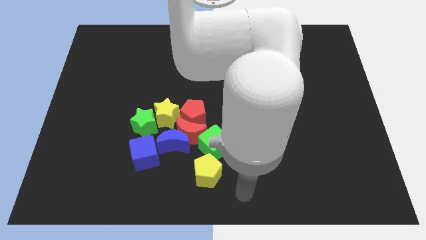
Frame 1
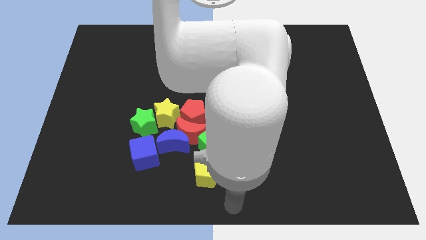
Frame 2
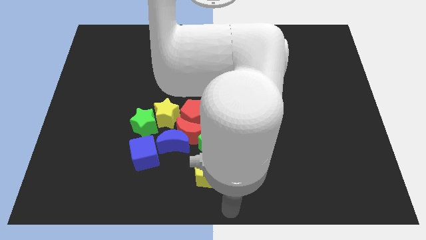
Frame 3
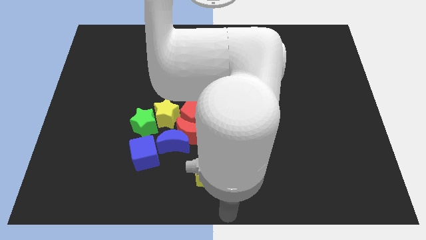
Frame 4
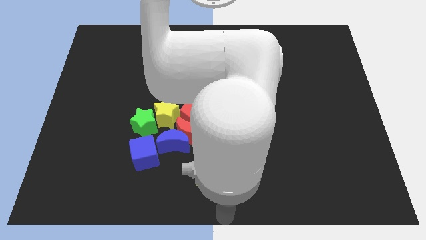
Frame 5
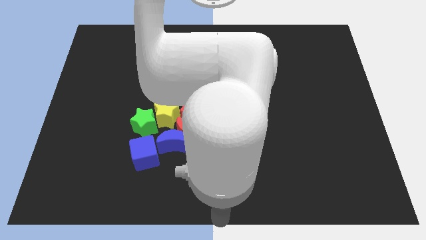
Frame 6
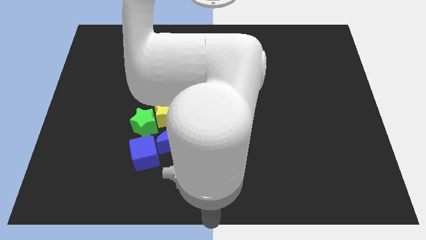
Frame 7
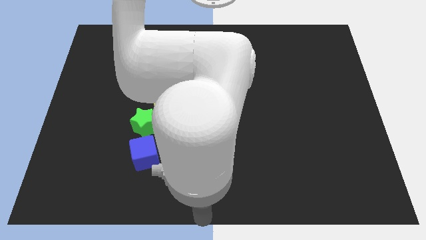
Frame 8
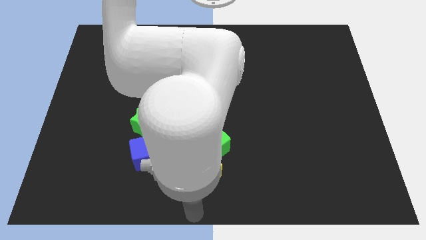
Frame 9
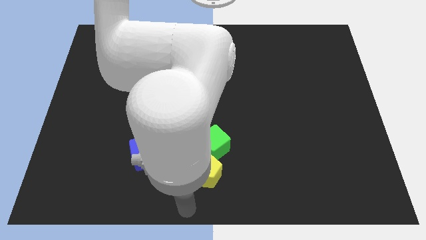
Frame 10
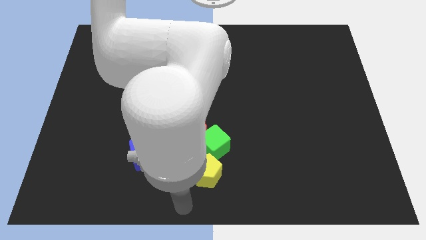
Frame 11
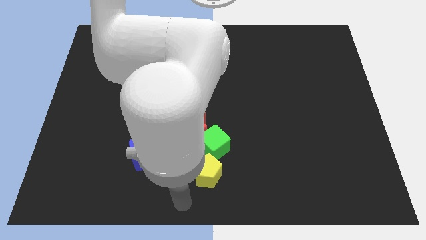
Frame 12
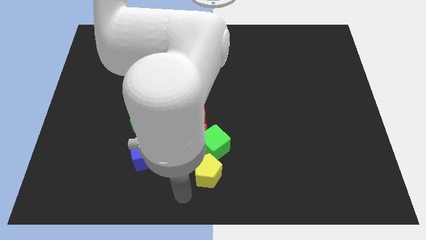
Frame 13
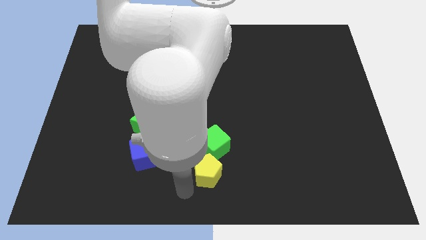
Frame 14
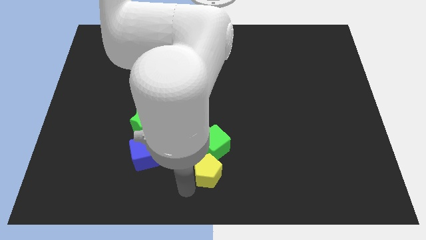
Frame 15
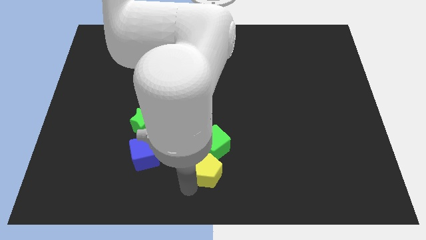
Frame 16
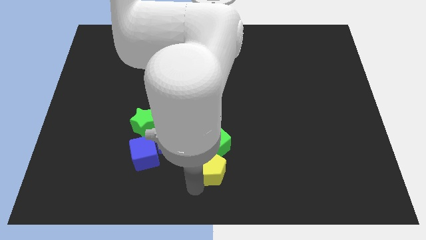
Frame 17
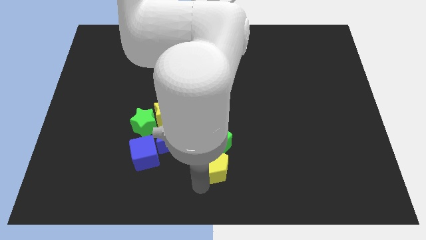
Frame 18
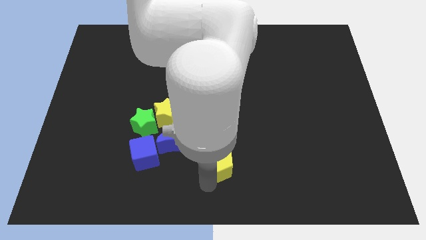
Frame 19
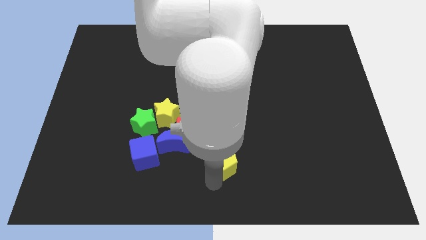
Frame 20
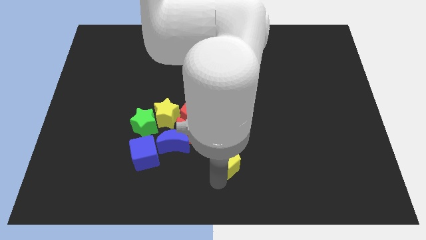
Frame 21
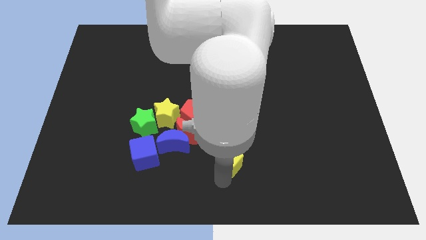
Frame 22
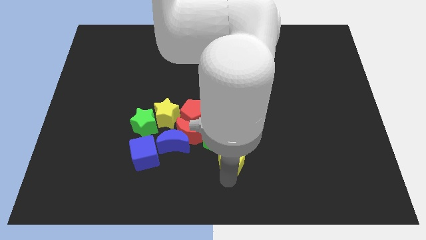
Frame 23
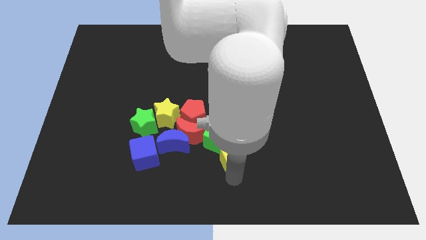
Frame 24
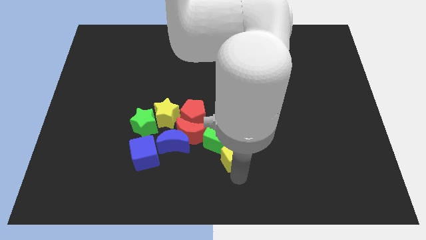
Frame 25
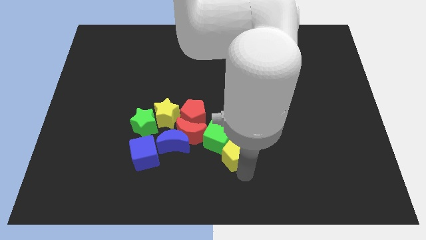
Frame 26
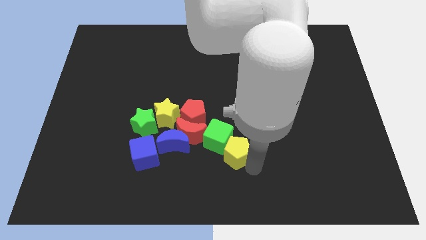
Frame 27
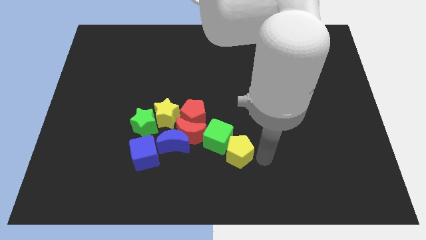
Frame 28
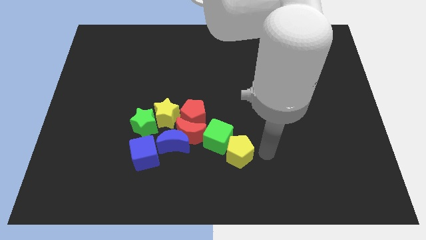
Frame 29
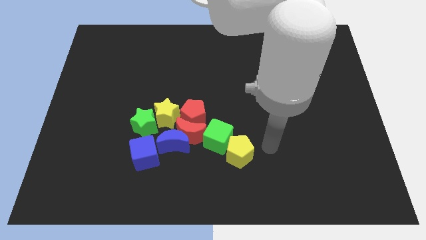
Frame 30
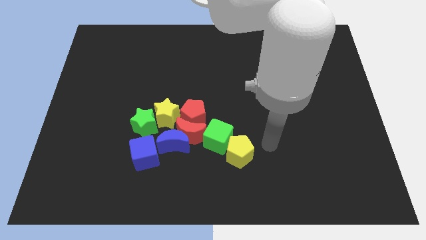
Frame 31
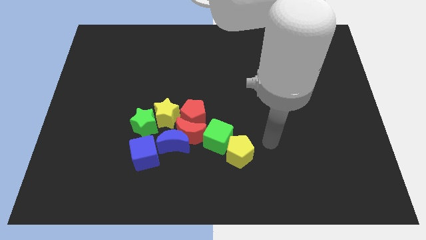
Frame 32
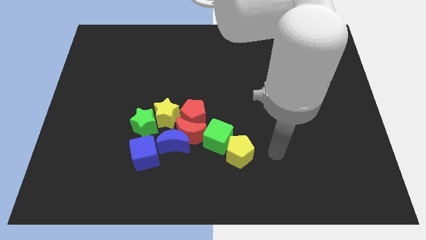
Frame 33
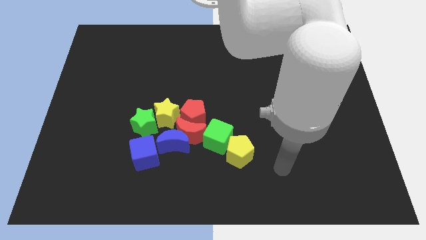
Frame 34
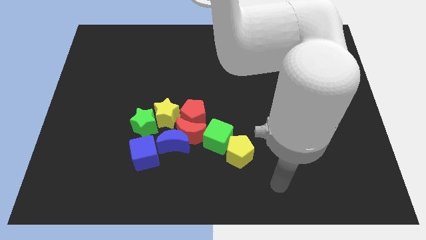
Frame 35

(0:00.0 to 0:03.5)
move the yellow pentagon to the left of the green cube

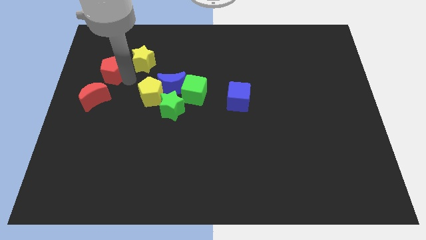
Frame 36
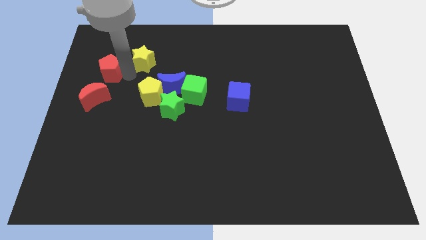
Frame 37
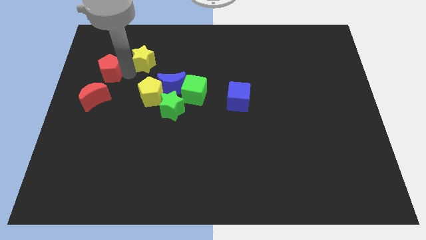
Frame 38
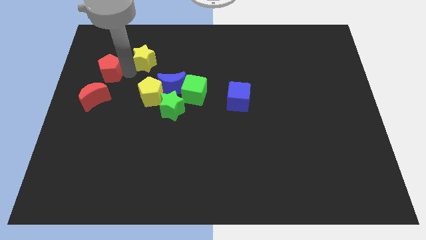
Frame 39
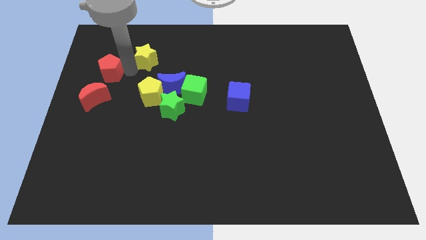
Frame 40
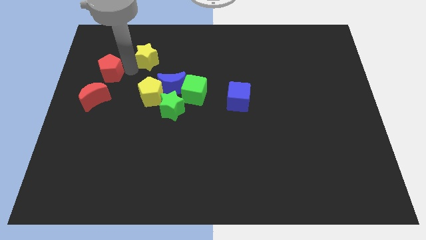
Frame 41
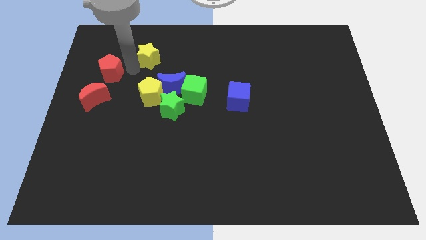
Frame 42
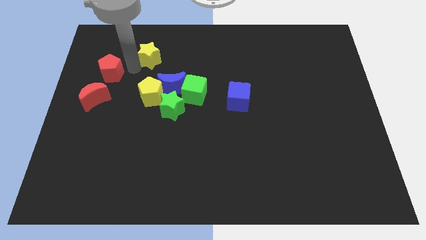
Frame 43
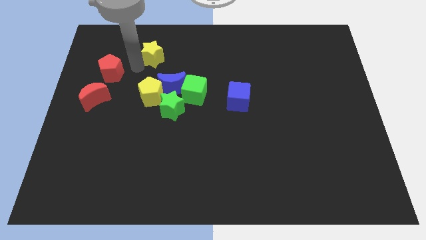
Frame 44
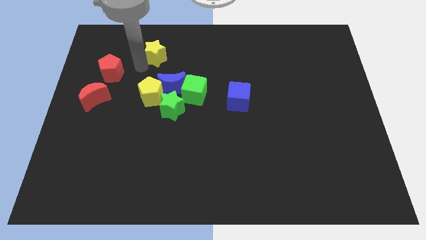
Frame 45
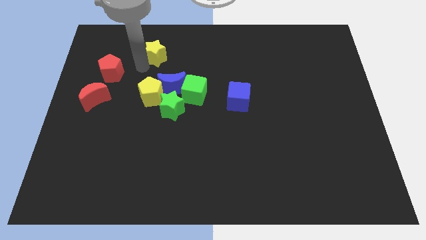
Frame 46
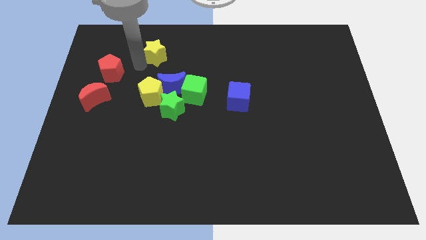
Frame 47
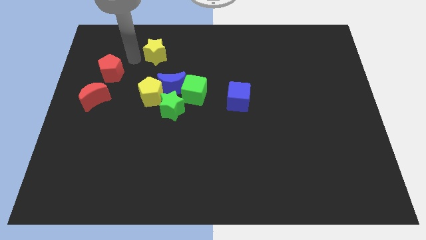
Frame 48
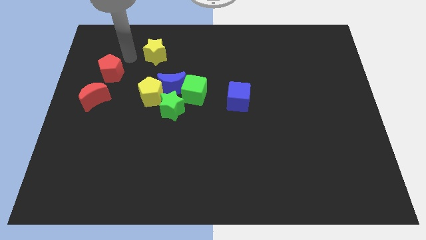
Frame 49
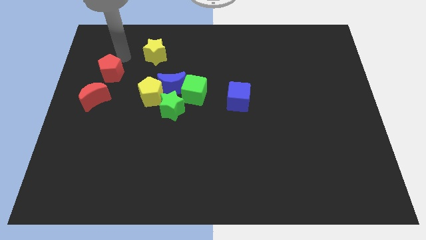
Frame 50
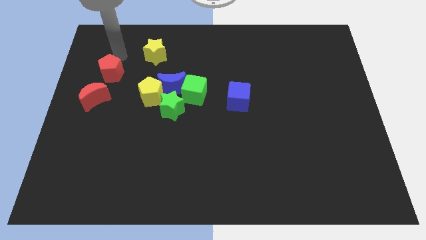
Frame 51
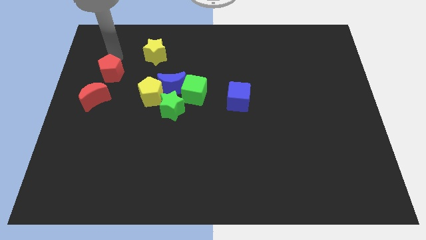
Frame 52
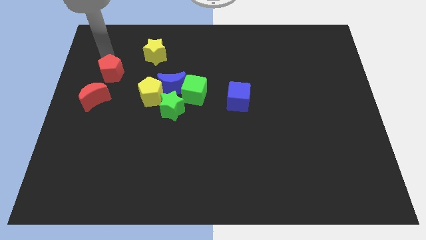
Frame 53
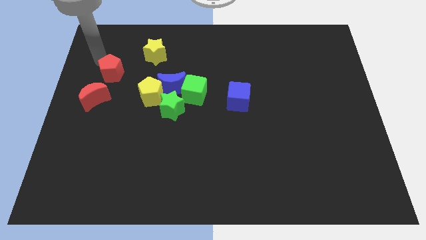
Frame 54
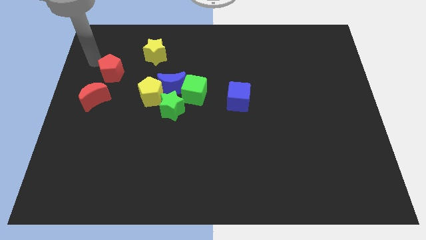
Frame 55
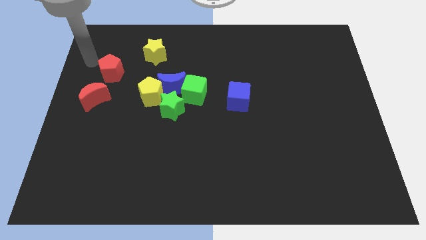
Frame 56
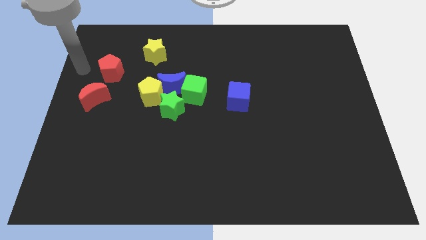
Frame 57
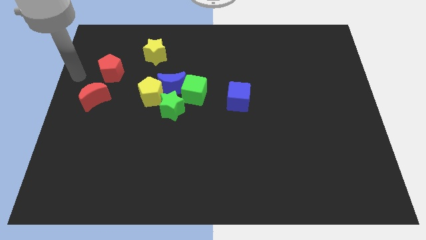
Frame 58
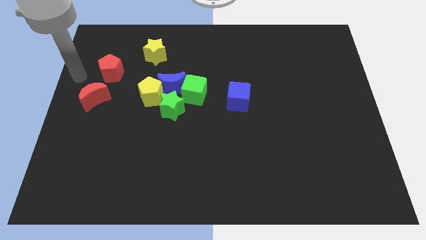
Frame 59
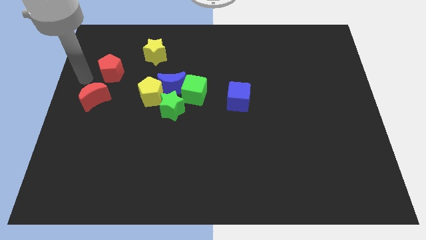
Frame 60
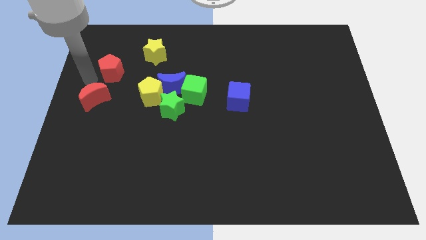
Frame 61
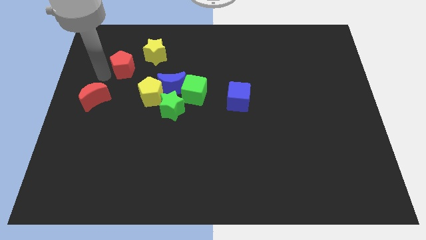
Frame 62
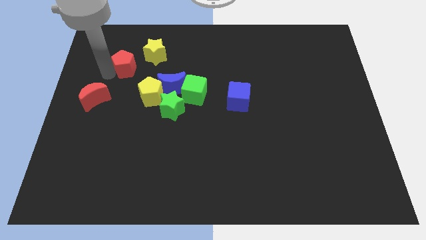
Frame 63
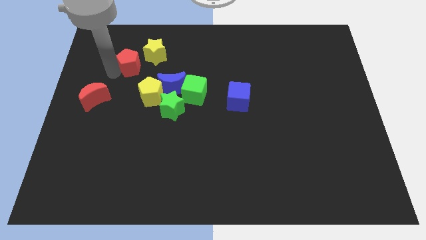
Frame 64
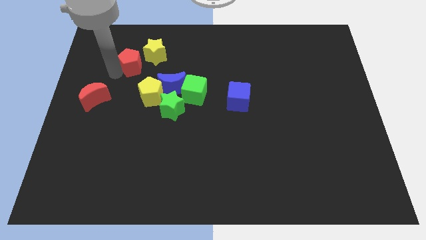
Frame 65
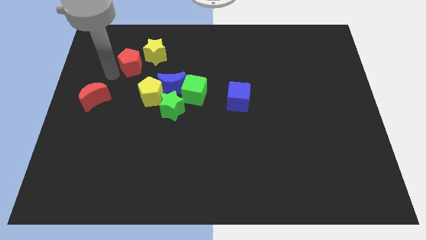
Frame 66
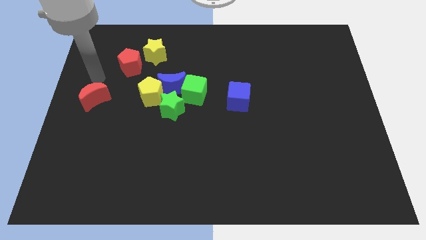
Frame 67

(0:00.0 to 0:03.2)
move red pentagon to the bottom left side of the yellow star

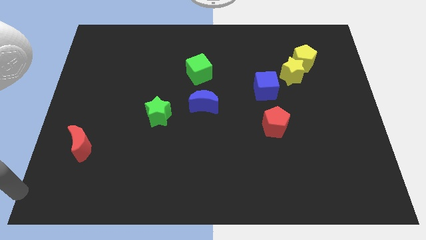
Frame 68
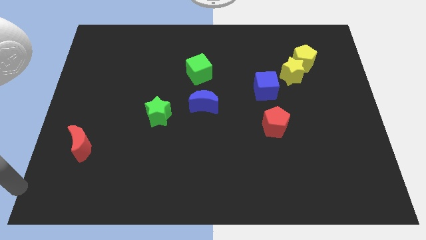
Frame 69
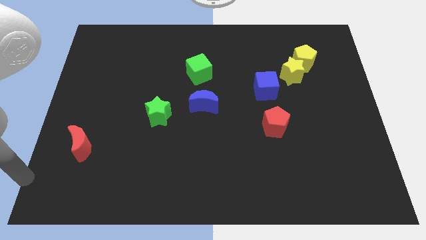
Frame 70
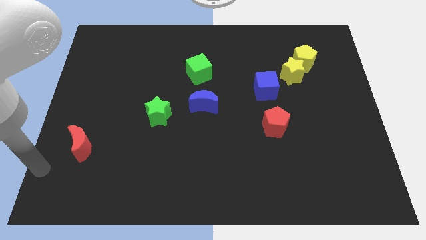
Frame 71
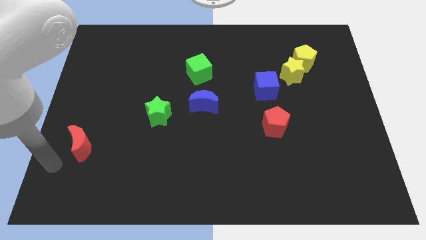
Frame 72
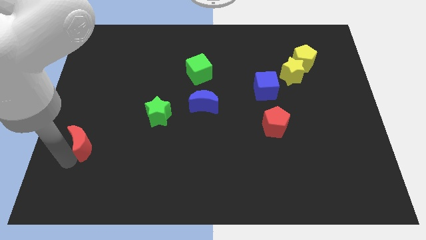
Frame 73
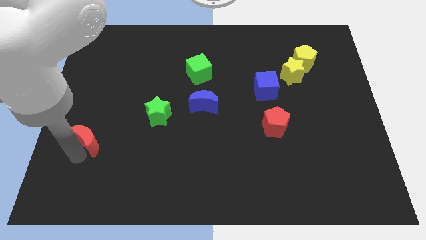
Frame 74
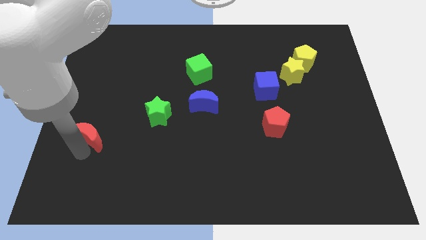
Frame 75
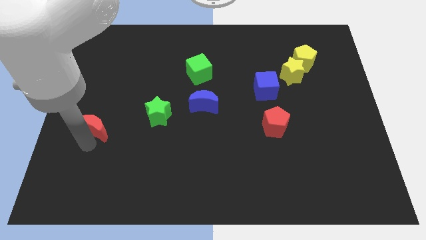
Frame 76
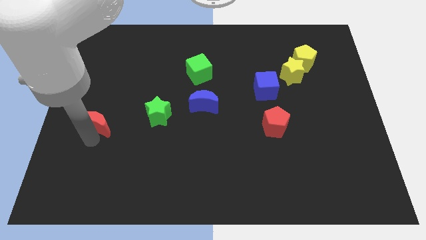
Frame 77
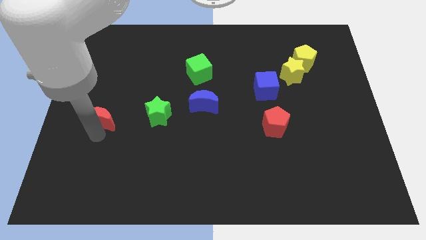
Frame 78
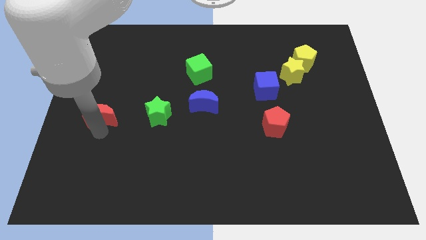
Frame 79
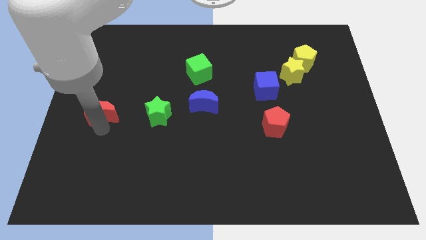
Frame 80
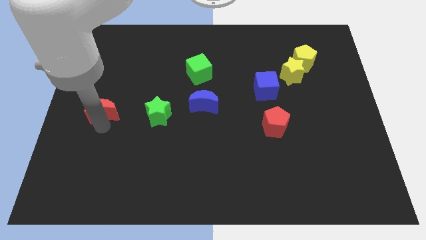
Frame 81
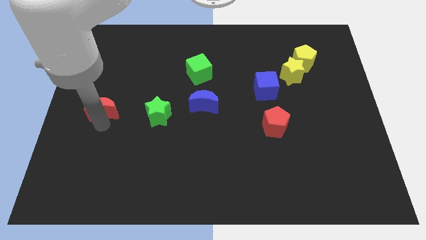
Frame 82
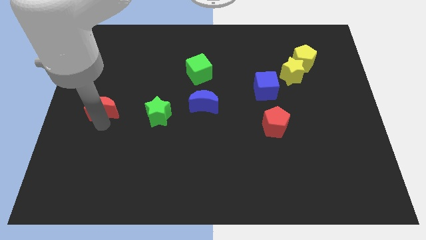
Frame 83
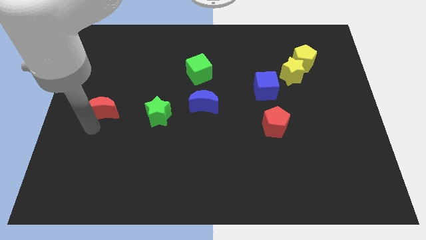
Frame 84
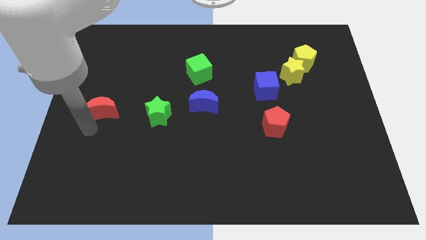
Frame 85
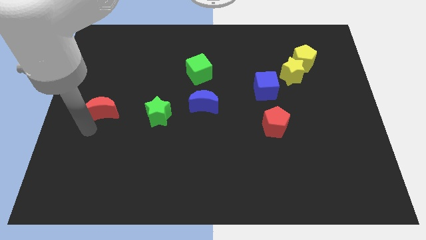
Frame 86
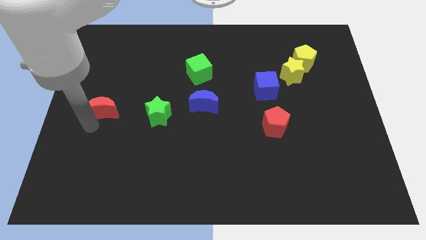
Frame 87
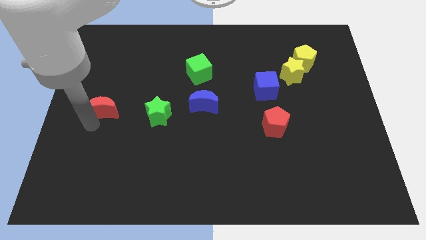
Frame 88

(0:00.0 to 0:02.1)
place red moon to the left of green star

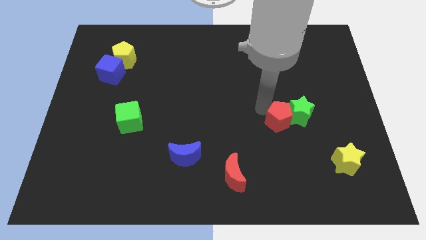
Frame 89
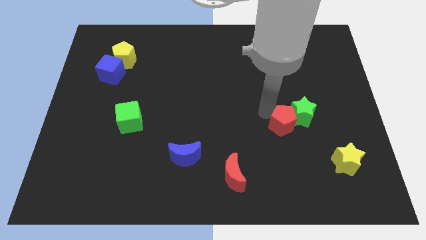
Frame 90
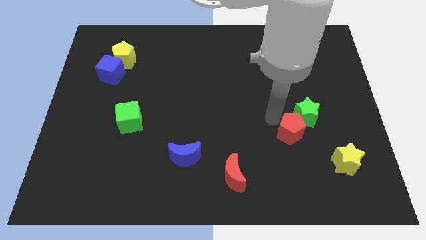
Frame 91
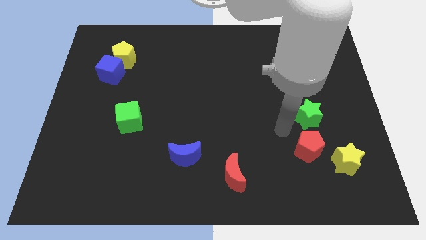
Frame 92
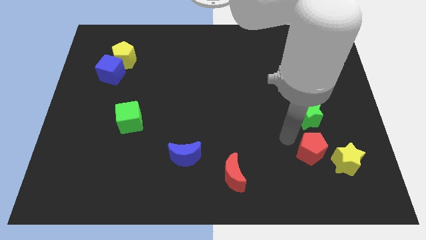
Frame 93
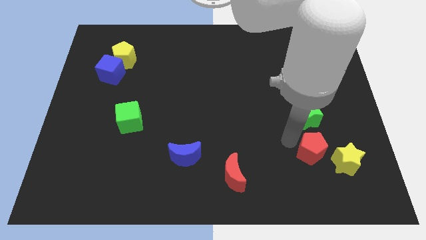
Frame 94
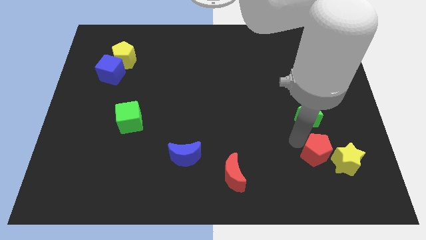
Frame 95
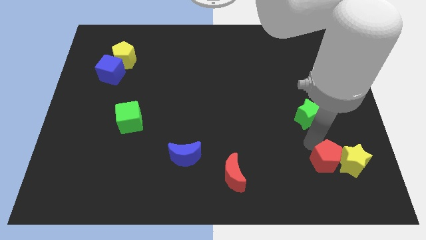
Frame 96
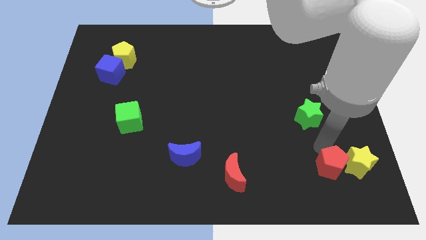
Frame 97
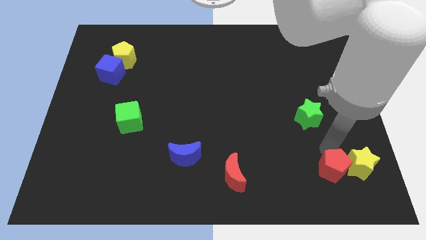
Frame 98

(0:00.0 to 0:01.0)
move red pentagon into yellow star
